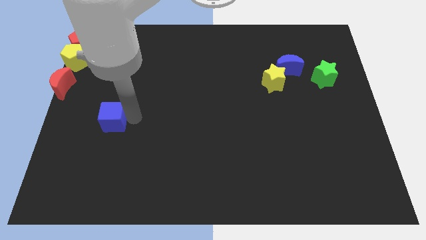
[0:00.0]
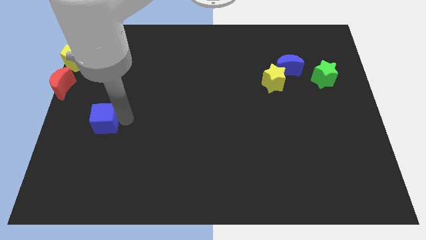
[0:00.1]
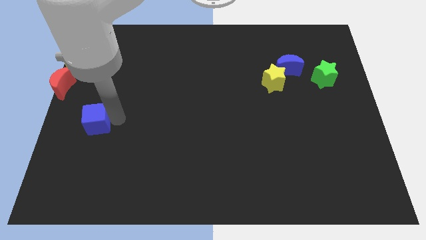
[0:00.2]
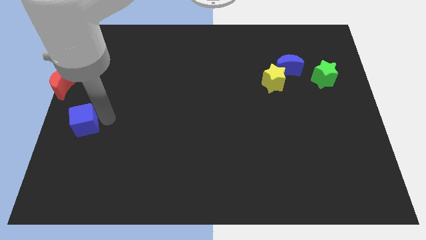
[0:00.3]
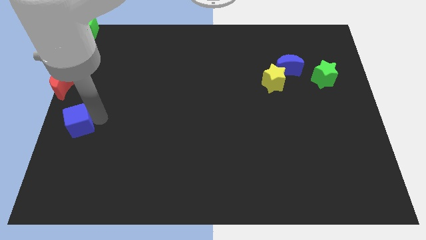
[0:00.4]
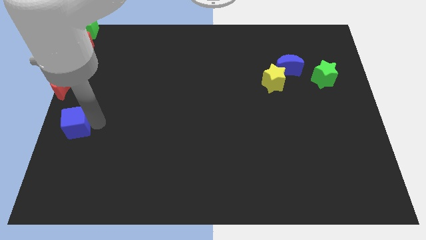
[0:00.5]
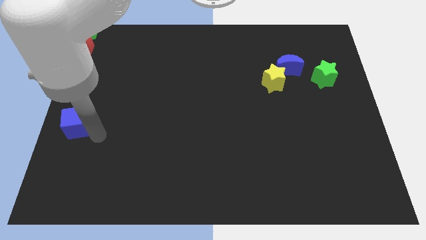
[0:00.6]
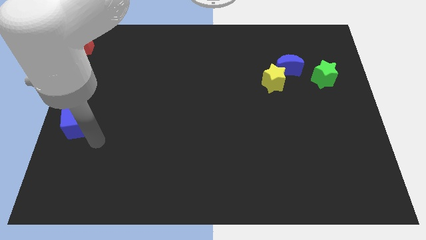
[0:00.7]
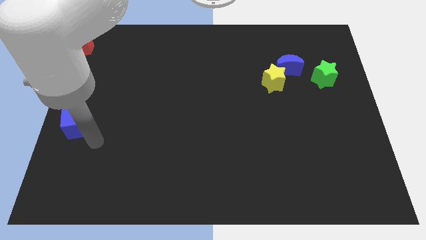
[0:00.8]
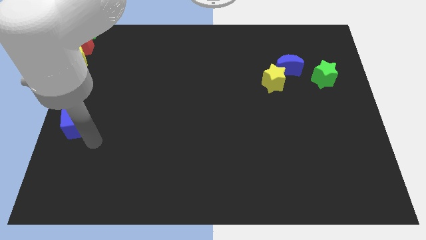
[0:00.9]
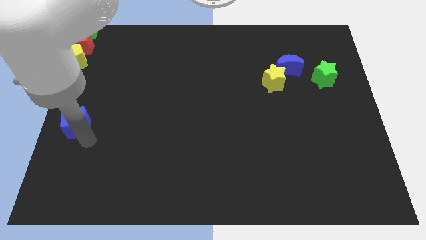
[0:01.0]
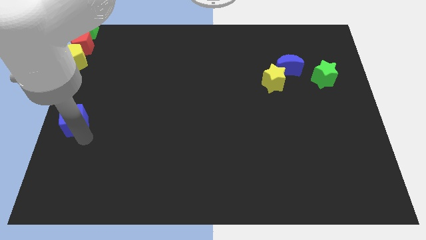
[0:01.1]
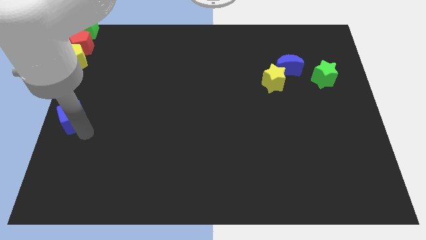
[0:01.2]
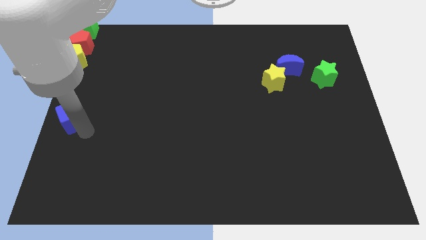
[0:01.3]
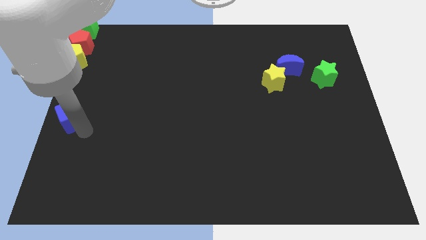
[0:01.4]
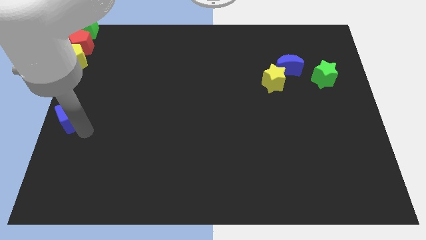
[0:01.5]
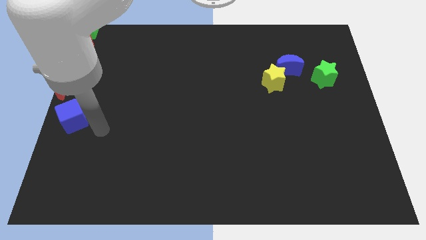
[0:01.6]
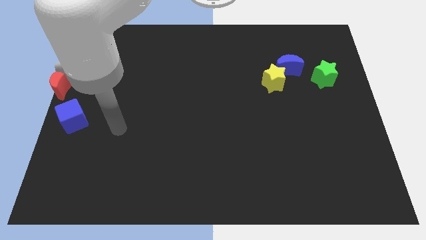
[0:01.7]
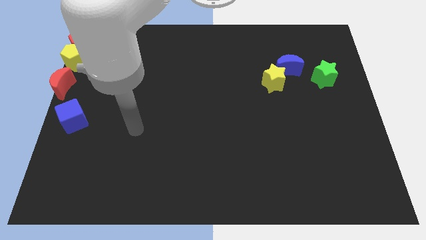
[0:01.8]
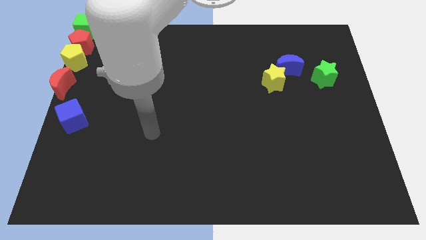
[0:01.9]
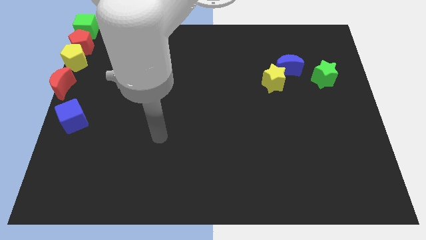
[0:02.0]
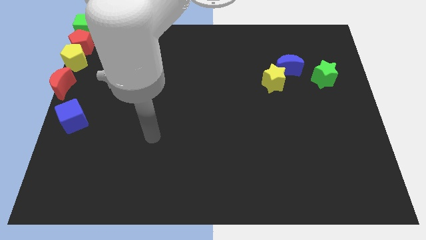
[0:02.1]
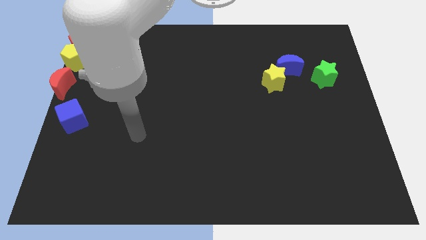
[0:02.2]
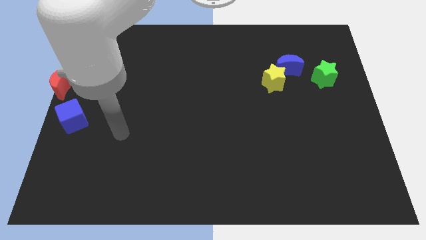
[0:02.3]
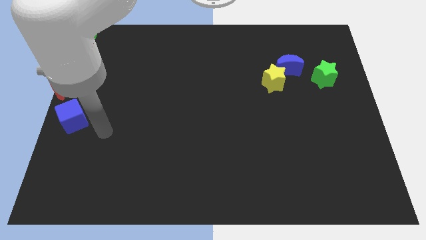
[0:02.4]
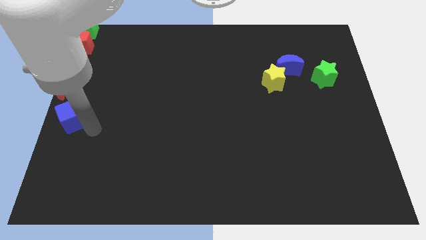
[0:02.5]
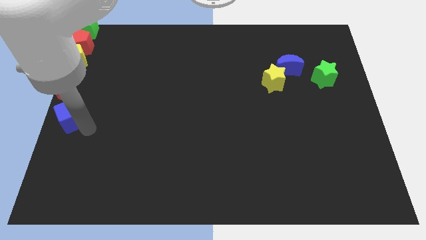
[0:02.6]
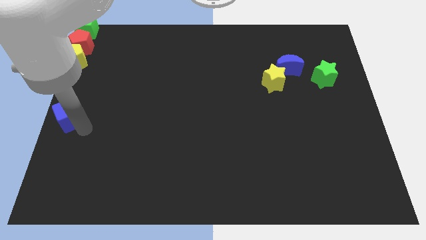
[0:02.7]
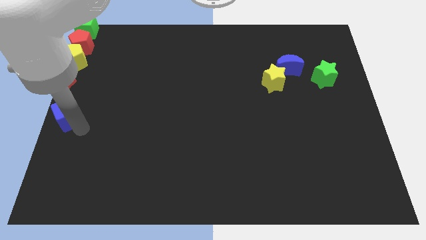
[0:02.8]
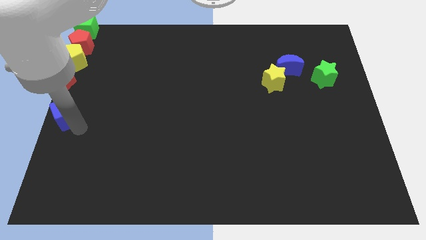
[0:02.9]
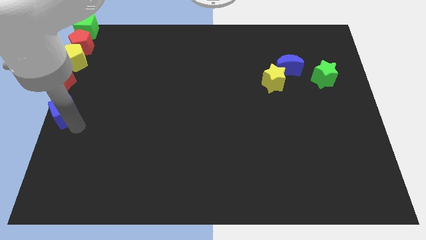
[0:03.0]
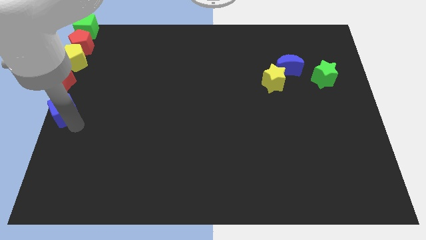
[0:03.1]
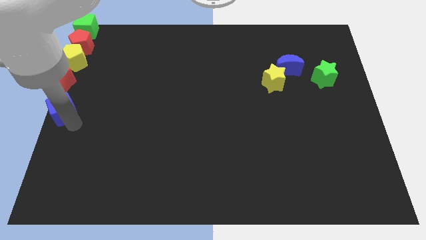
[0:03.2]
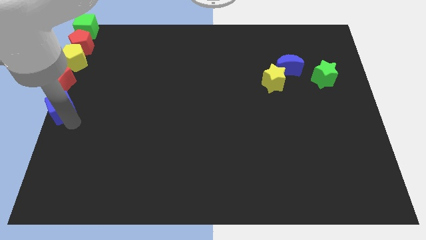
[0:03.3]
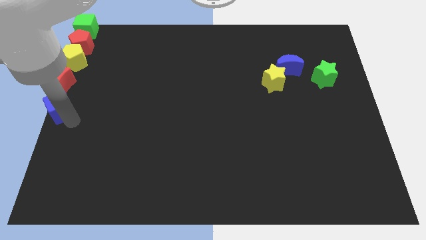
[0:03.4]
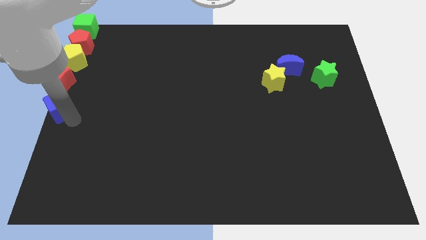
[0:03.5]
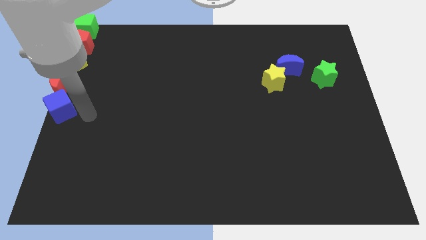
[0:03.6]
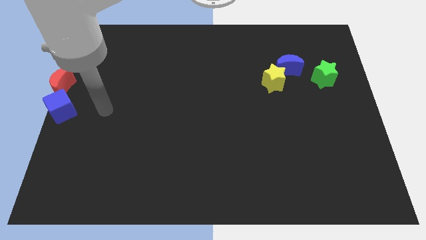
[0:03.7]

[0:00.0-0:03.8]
move the blue cube to the right bottom of the red crescent

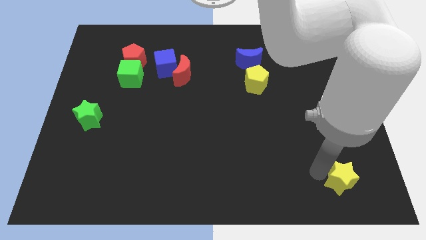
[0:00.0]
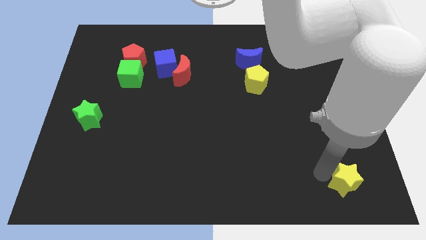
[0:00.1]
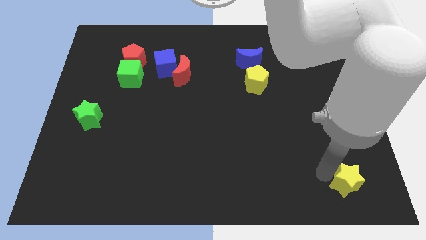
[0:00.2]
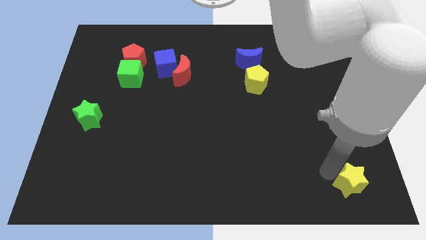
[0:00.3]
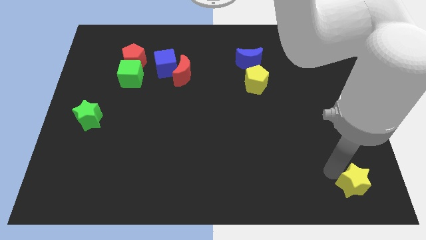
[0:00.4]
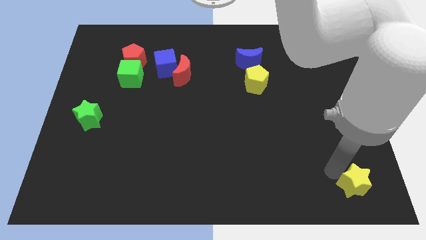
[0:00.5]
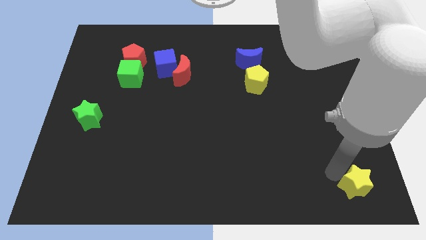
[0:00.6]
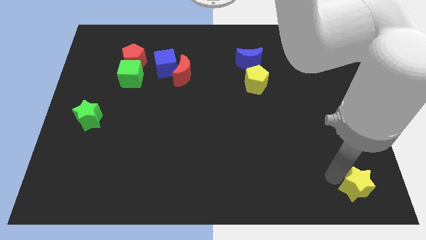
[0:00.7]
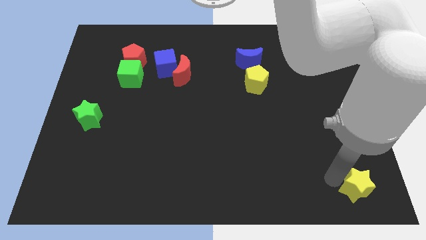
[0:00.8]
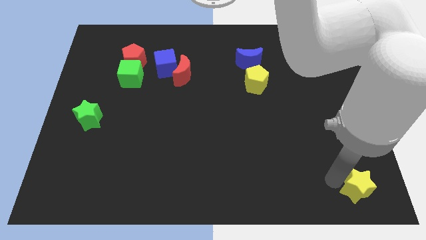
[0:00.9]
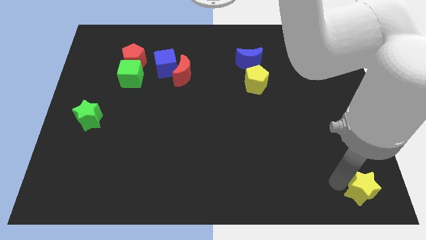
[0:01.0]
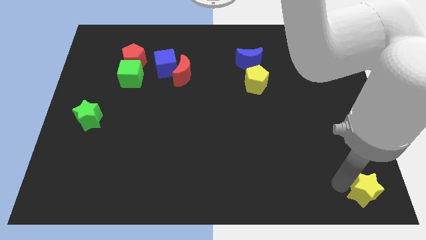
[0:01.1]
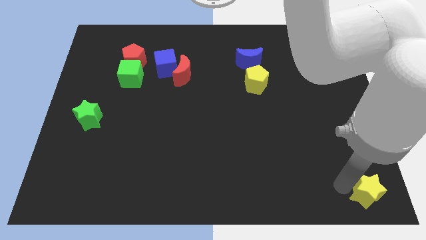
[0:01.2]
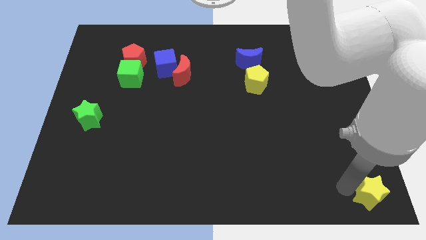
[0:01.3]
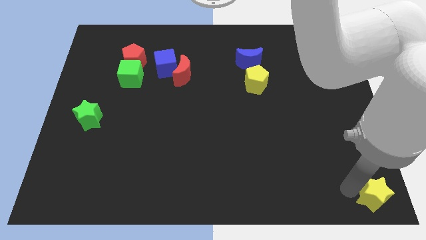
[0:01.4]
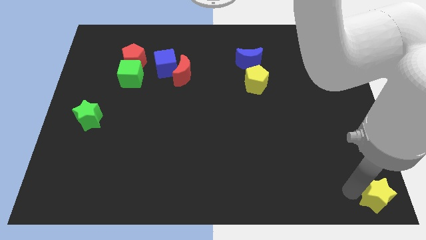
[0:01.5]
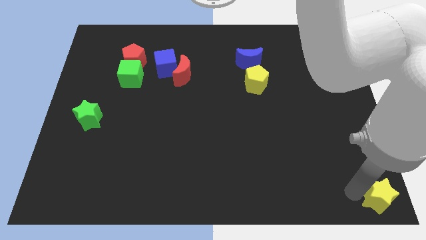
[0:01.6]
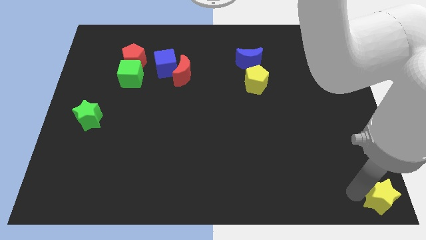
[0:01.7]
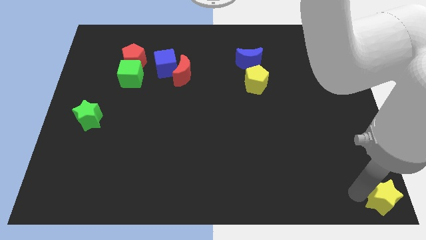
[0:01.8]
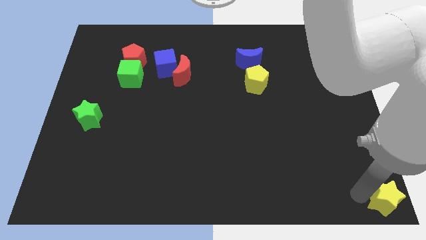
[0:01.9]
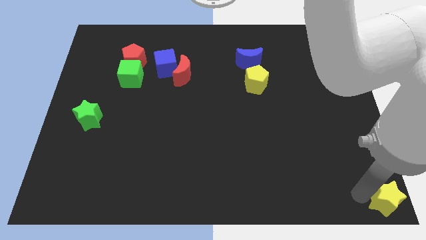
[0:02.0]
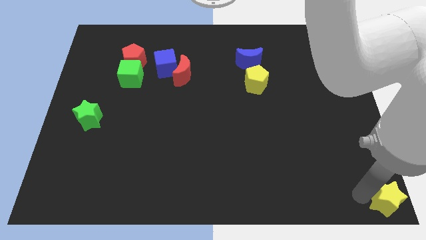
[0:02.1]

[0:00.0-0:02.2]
move the yellow star to the bottom right to the board

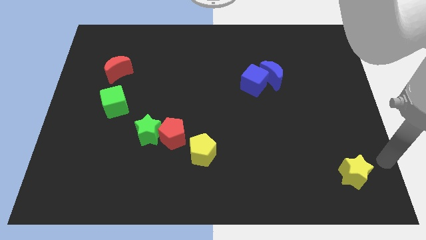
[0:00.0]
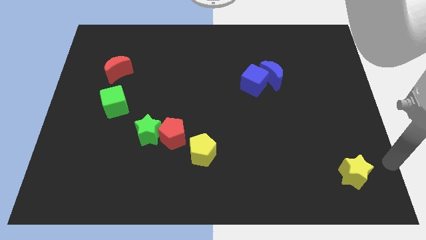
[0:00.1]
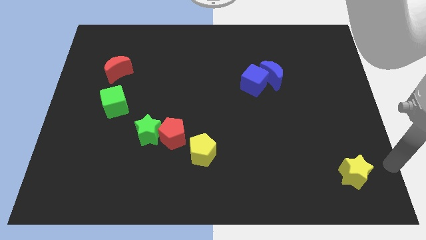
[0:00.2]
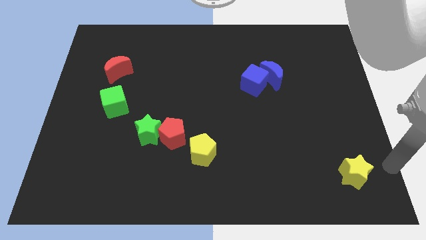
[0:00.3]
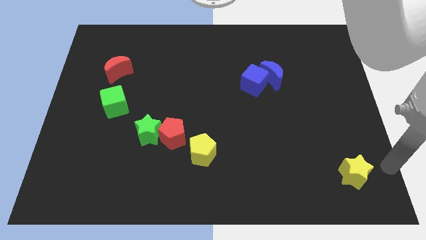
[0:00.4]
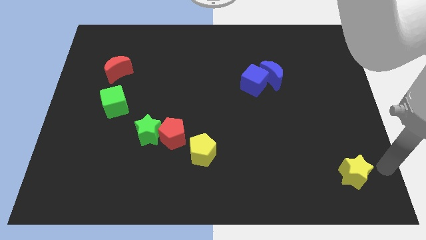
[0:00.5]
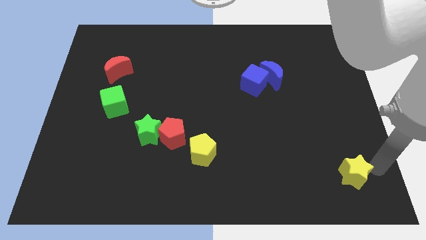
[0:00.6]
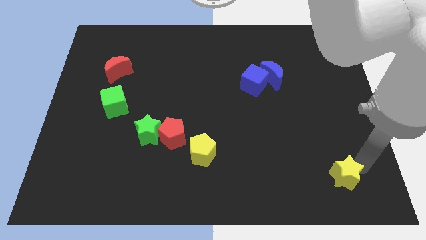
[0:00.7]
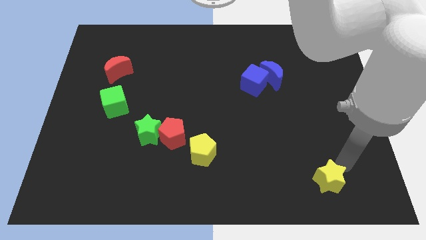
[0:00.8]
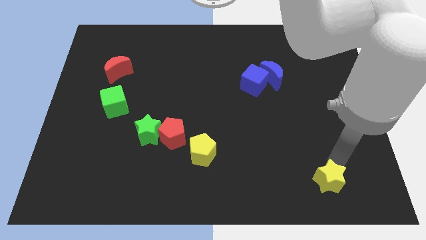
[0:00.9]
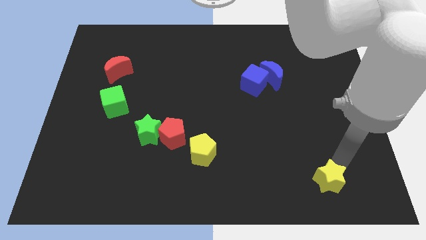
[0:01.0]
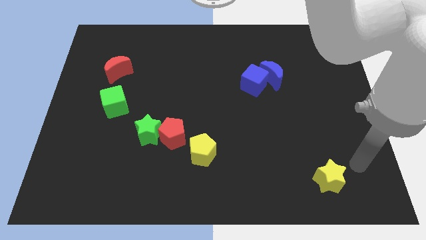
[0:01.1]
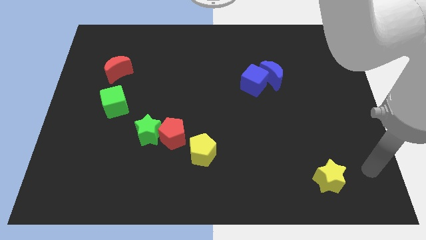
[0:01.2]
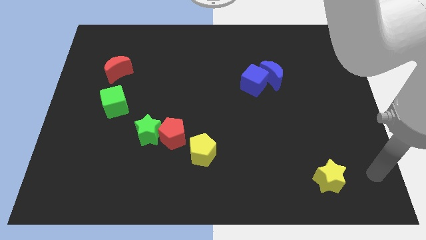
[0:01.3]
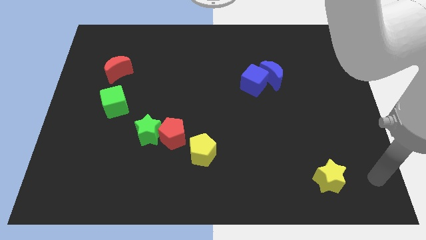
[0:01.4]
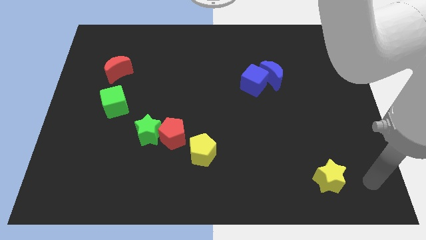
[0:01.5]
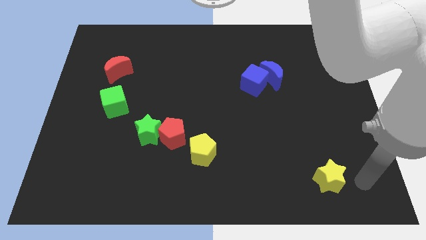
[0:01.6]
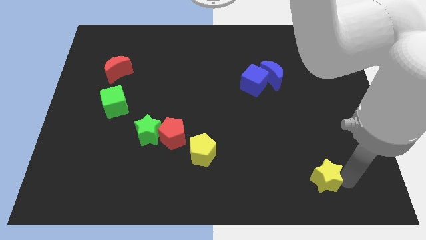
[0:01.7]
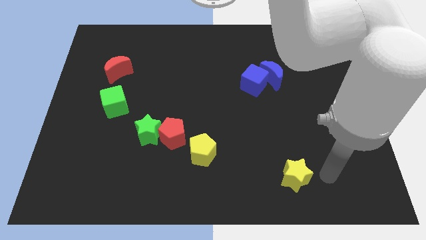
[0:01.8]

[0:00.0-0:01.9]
push the yellow star towards the center

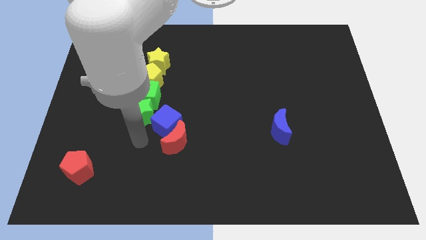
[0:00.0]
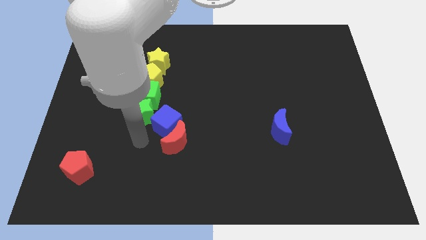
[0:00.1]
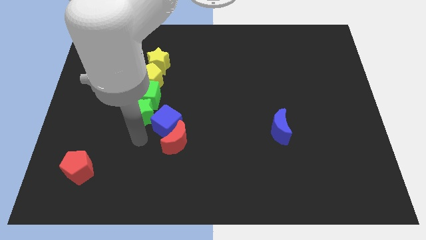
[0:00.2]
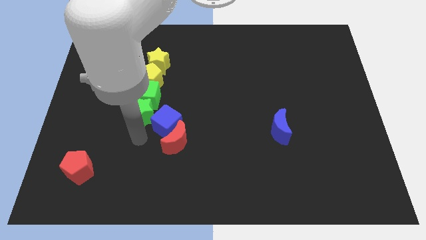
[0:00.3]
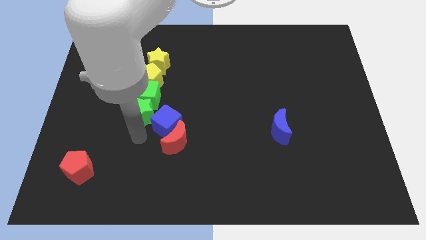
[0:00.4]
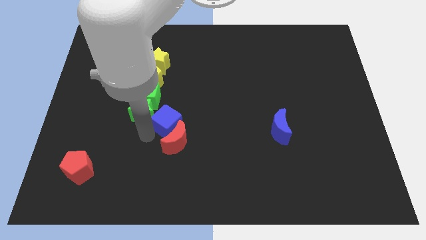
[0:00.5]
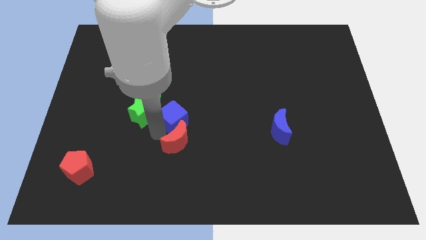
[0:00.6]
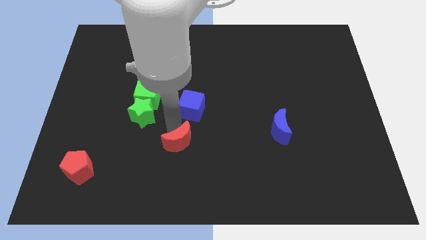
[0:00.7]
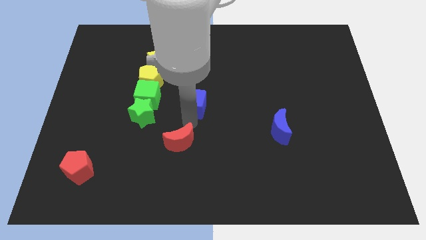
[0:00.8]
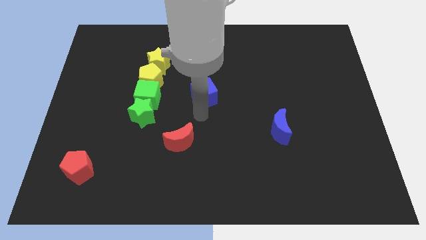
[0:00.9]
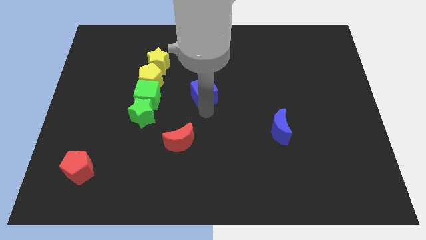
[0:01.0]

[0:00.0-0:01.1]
separate the blue cube from red moon and green star
